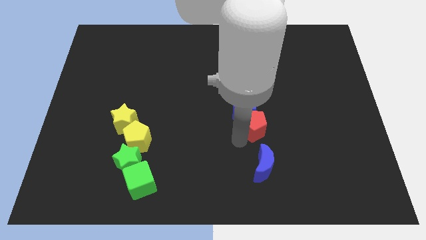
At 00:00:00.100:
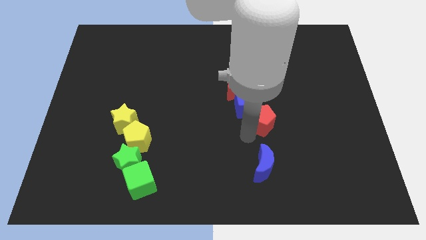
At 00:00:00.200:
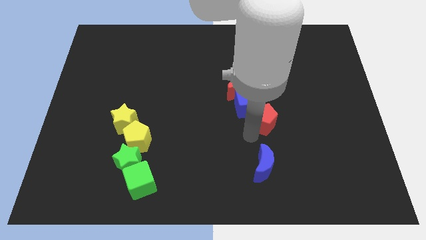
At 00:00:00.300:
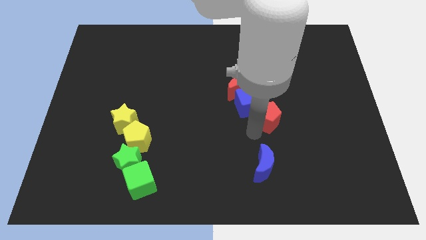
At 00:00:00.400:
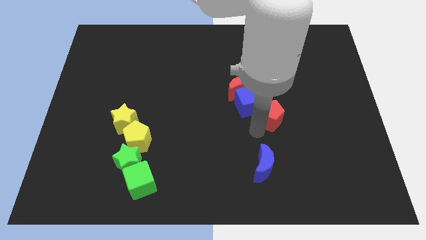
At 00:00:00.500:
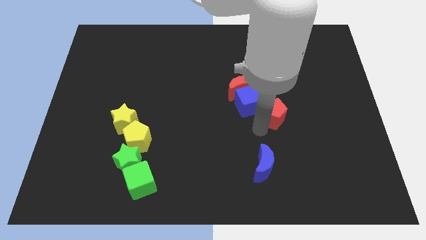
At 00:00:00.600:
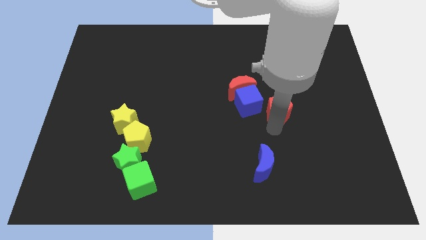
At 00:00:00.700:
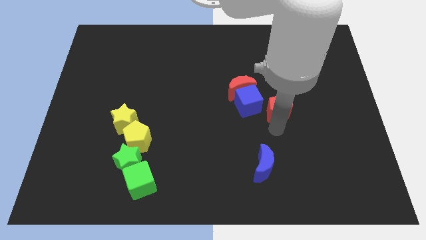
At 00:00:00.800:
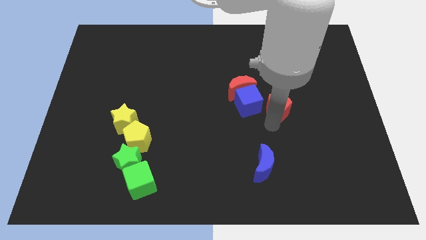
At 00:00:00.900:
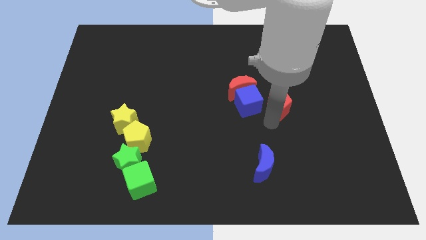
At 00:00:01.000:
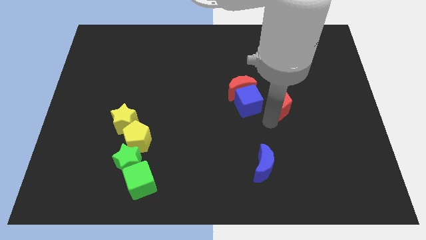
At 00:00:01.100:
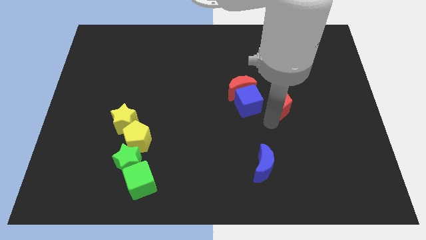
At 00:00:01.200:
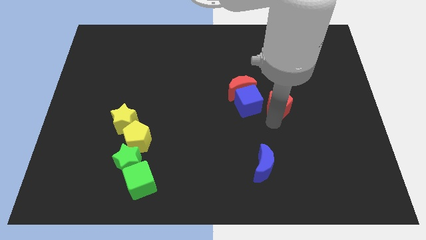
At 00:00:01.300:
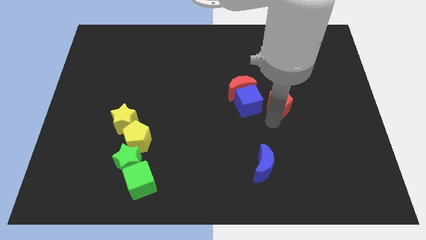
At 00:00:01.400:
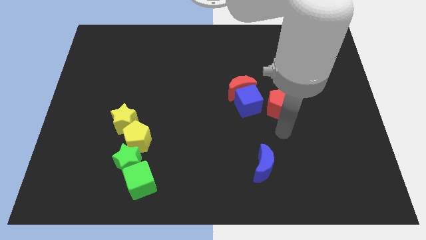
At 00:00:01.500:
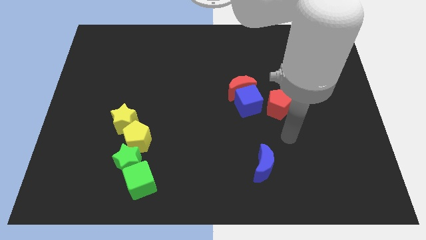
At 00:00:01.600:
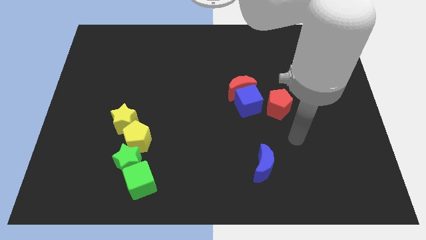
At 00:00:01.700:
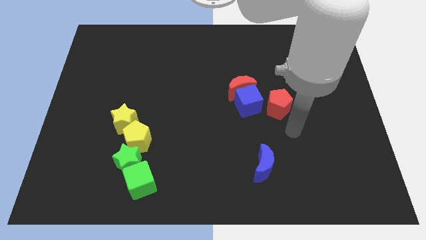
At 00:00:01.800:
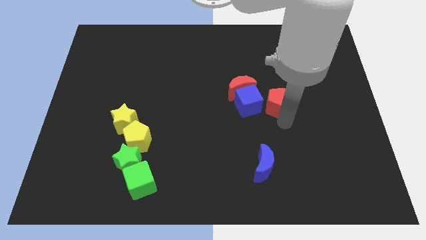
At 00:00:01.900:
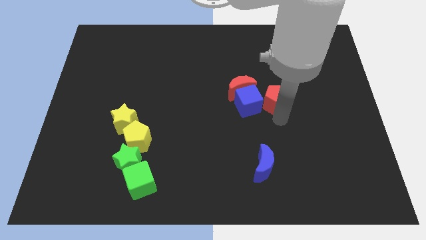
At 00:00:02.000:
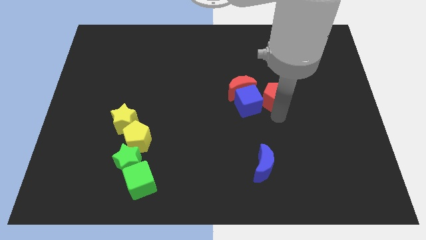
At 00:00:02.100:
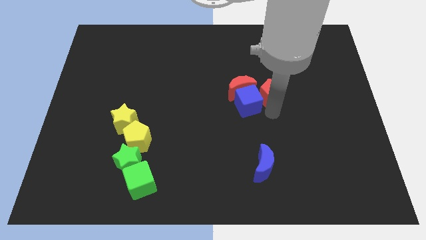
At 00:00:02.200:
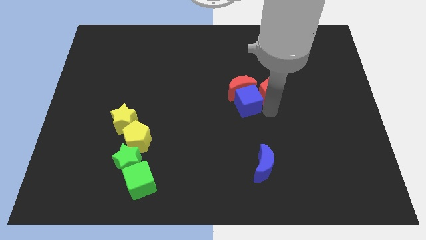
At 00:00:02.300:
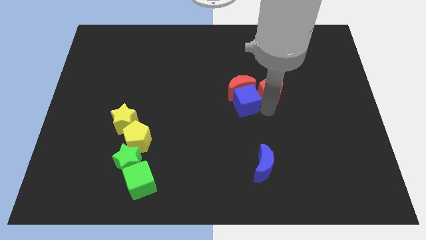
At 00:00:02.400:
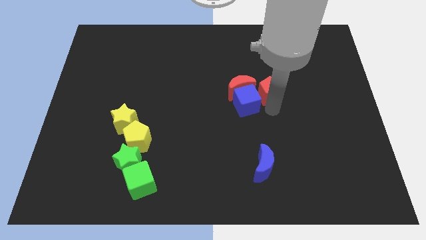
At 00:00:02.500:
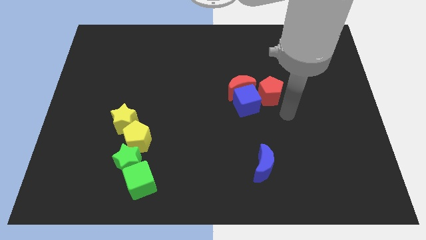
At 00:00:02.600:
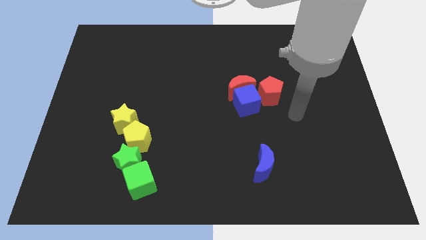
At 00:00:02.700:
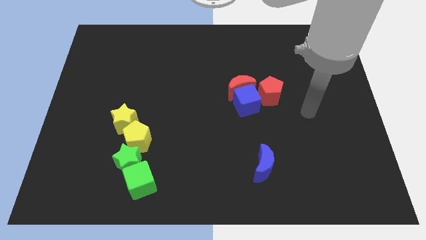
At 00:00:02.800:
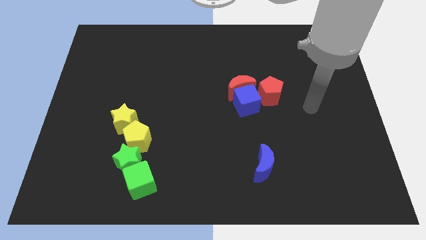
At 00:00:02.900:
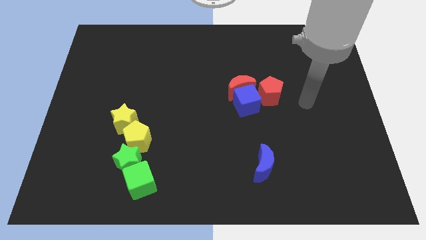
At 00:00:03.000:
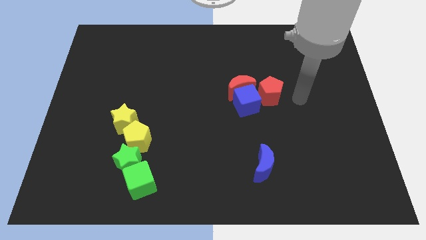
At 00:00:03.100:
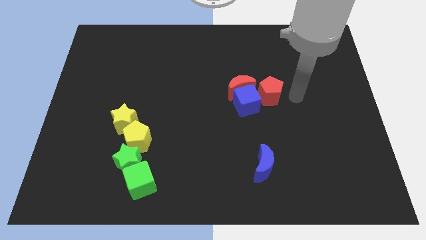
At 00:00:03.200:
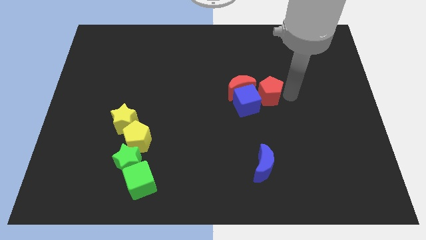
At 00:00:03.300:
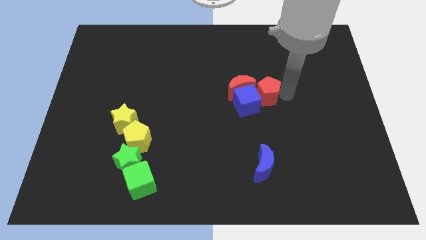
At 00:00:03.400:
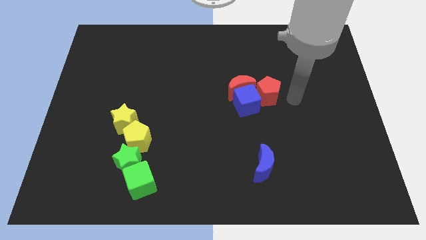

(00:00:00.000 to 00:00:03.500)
move the red pentagon into the right side of the group of blocks

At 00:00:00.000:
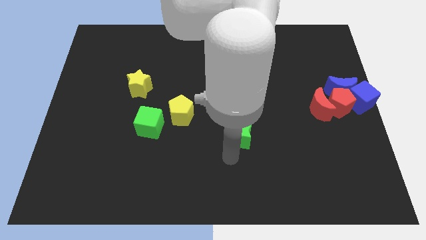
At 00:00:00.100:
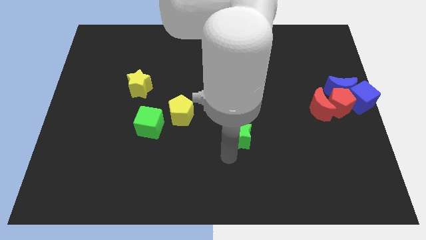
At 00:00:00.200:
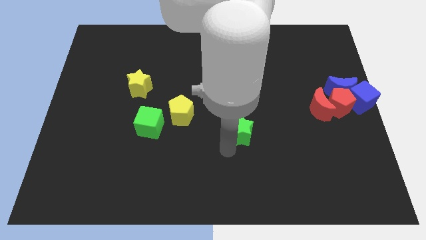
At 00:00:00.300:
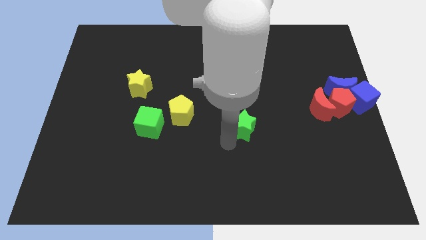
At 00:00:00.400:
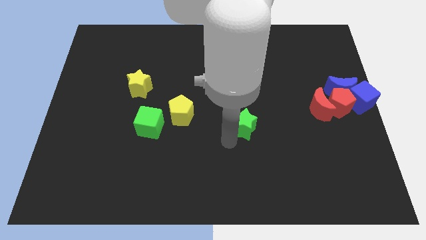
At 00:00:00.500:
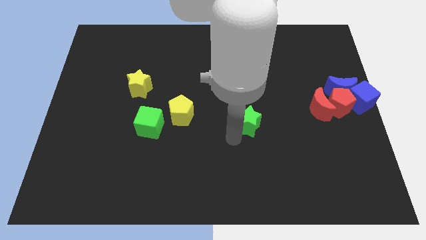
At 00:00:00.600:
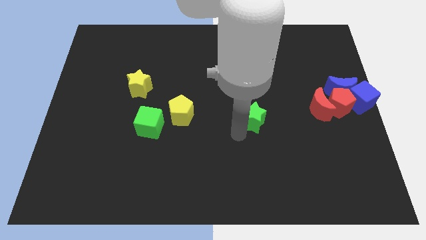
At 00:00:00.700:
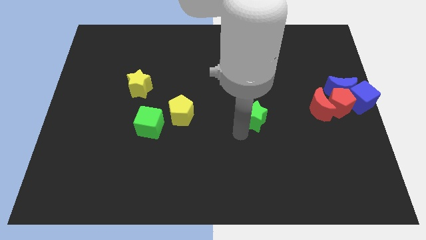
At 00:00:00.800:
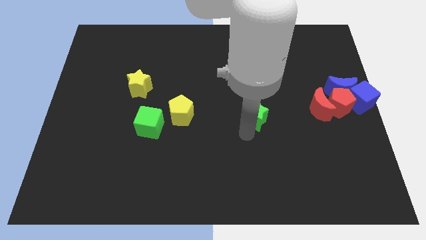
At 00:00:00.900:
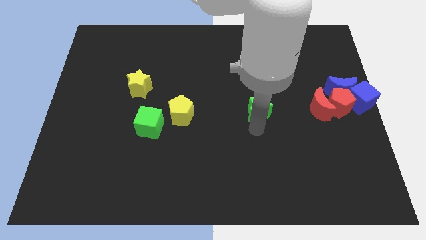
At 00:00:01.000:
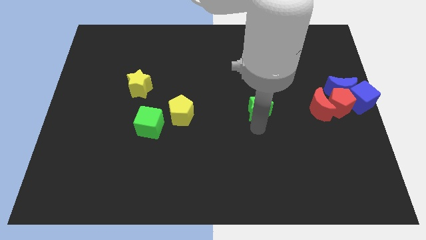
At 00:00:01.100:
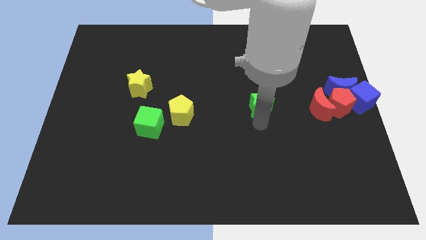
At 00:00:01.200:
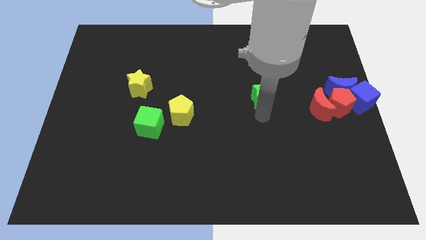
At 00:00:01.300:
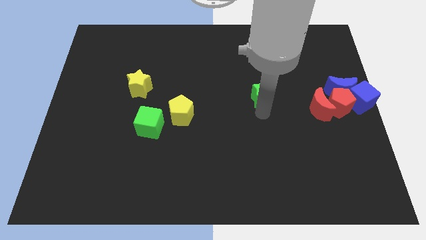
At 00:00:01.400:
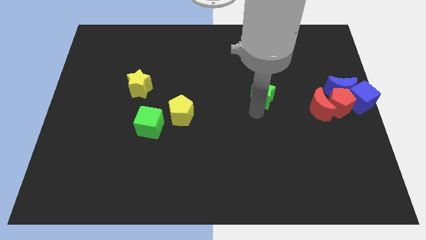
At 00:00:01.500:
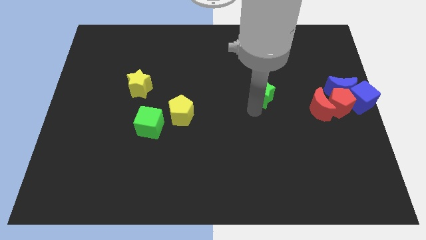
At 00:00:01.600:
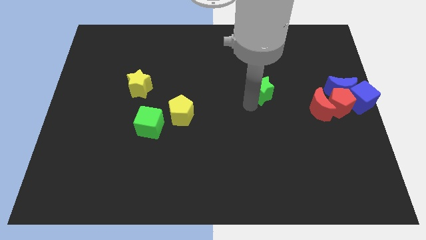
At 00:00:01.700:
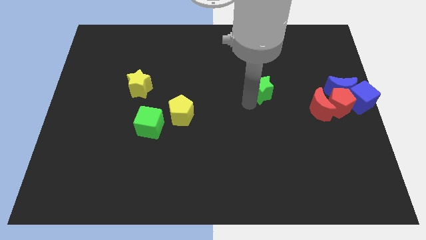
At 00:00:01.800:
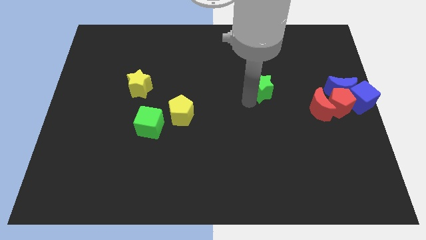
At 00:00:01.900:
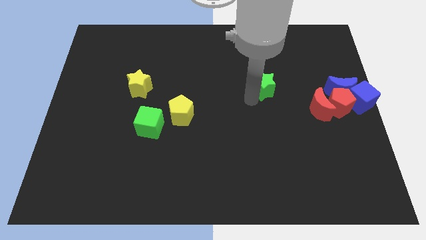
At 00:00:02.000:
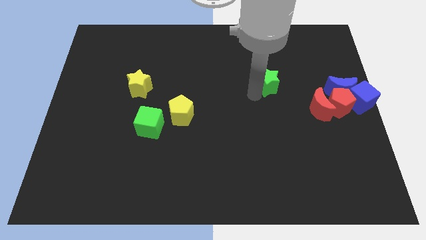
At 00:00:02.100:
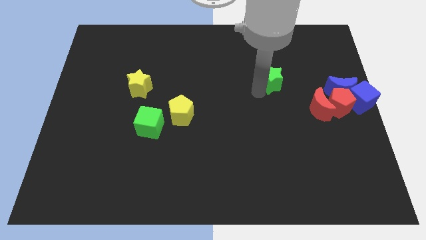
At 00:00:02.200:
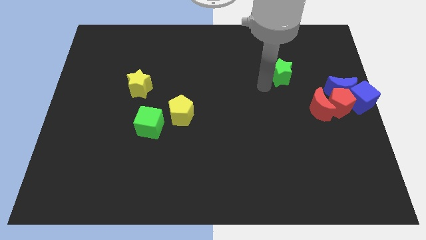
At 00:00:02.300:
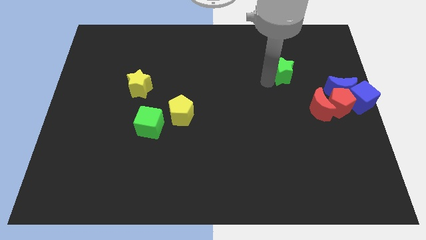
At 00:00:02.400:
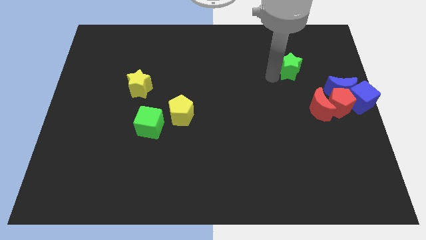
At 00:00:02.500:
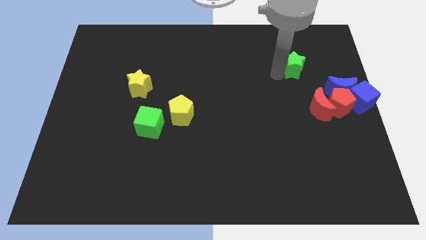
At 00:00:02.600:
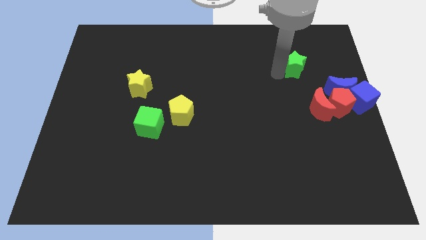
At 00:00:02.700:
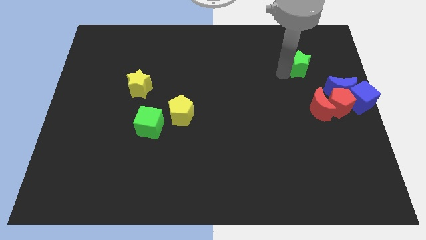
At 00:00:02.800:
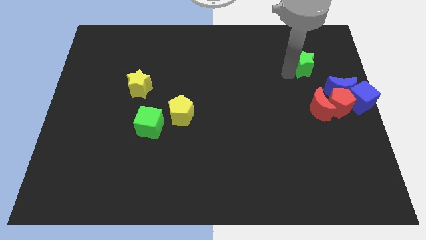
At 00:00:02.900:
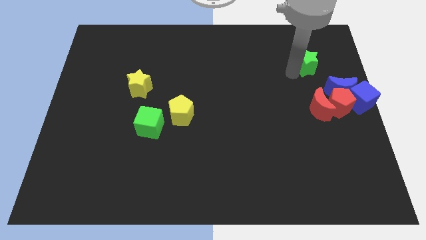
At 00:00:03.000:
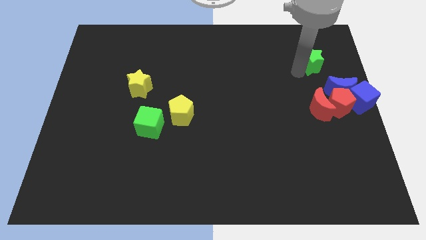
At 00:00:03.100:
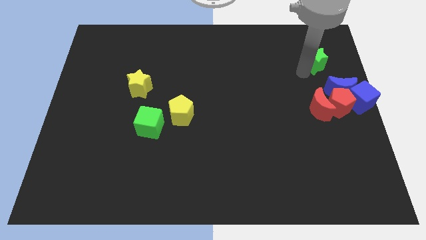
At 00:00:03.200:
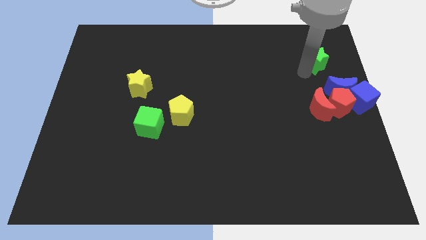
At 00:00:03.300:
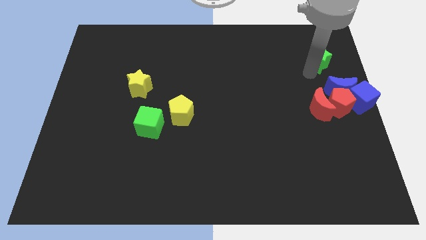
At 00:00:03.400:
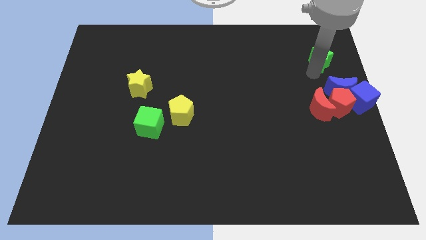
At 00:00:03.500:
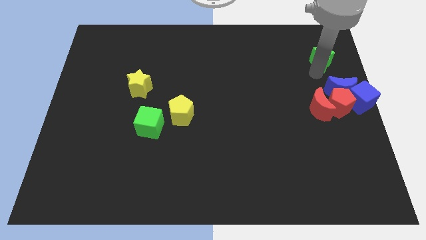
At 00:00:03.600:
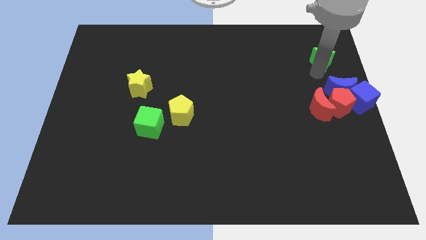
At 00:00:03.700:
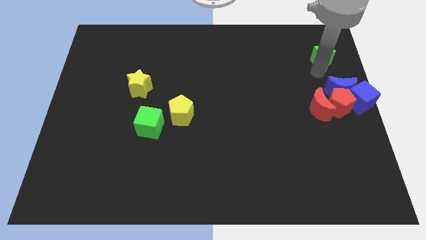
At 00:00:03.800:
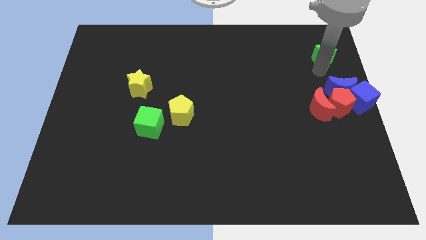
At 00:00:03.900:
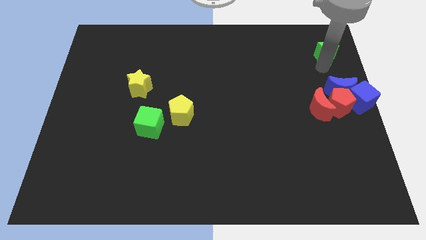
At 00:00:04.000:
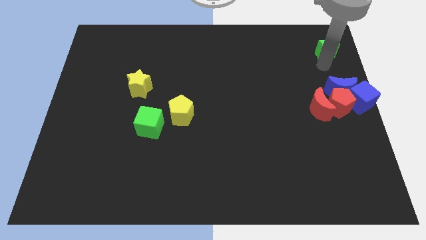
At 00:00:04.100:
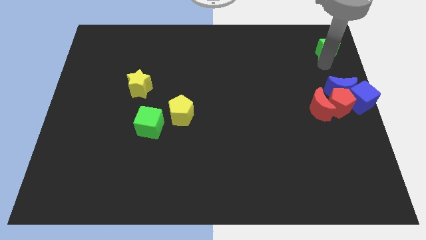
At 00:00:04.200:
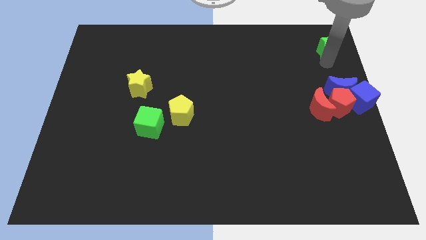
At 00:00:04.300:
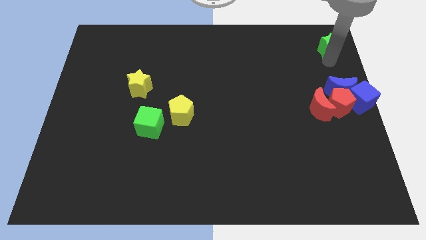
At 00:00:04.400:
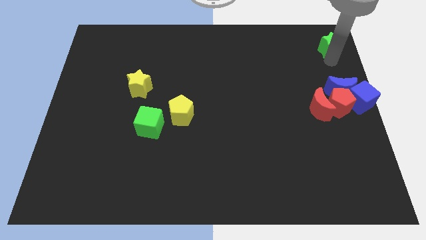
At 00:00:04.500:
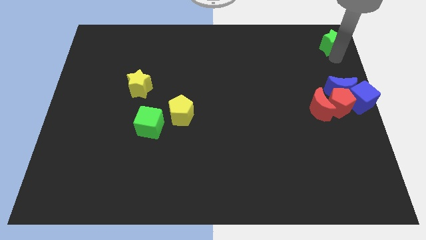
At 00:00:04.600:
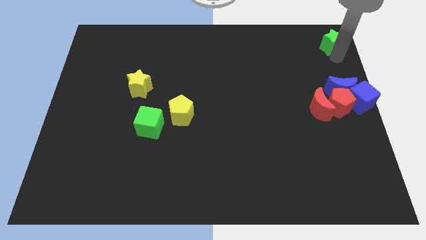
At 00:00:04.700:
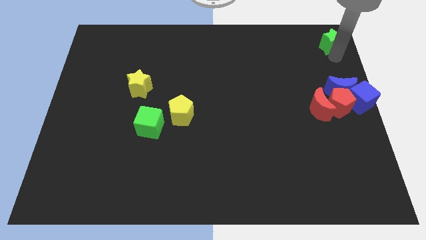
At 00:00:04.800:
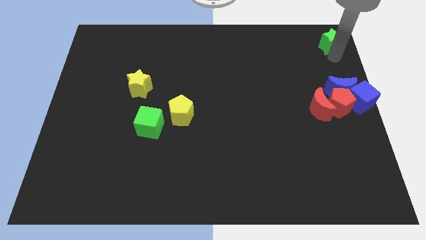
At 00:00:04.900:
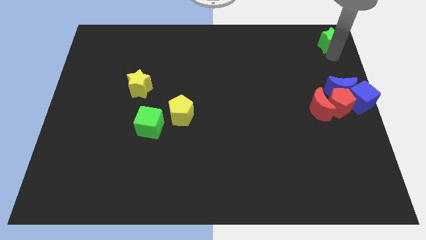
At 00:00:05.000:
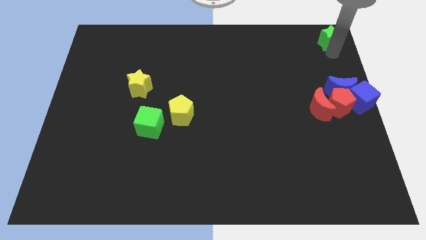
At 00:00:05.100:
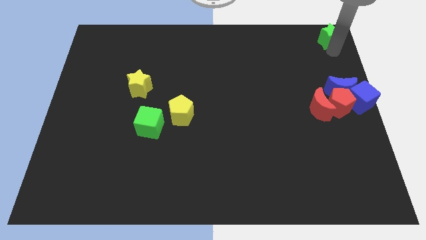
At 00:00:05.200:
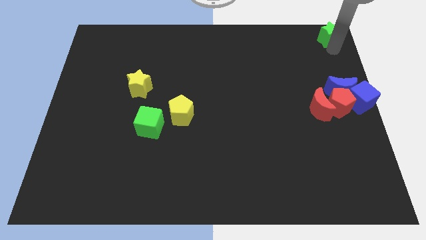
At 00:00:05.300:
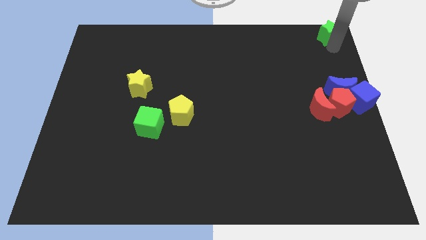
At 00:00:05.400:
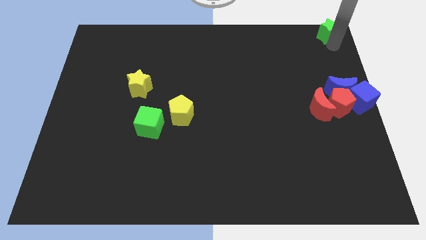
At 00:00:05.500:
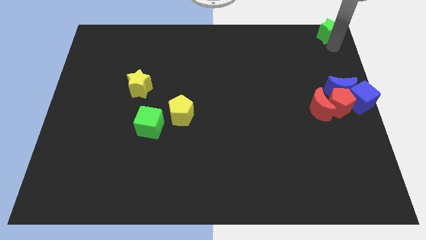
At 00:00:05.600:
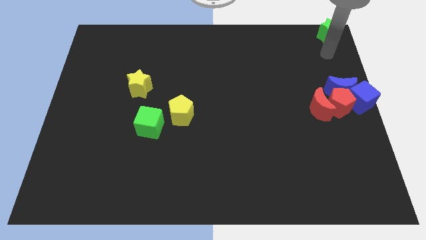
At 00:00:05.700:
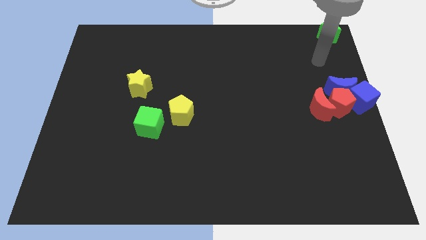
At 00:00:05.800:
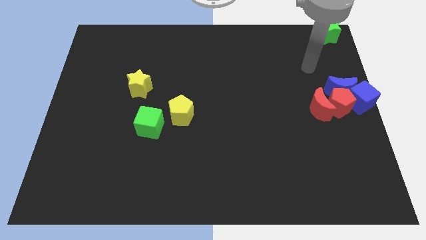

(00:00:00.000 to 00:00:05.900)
push the green star to the top right of the board
